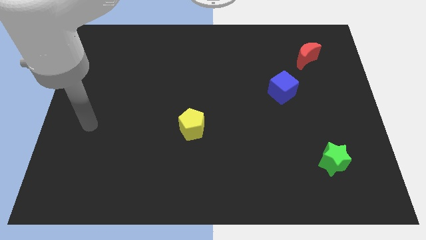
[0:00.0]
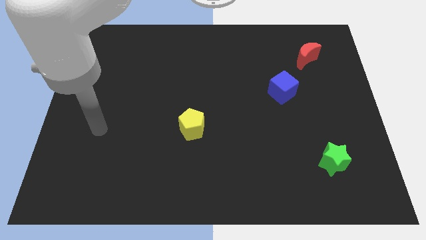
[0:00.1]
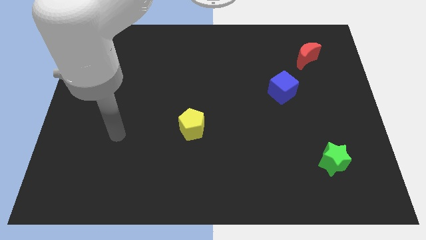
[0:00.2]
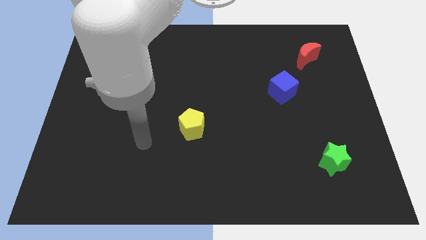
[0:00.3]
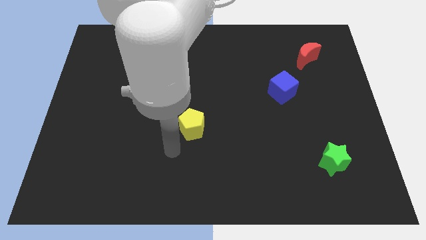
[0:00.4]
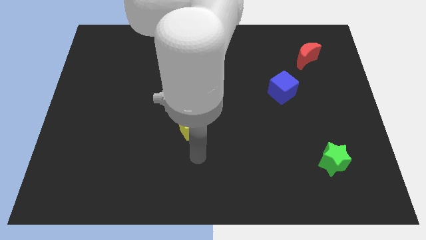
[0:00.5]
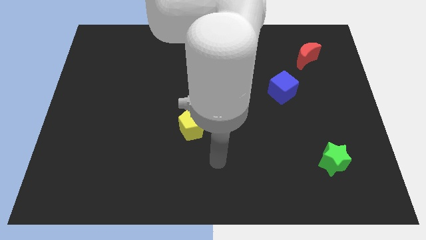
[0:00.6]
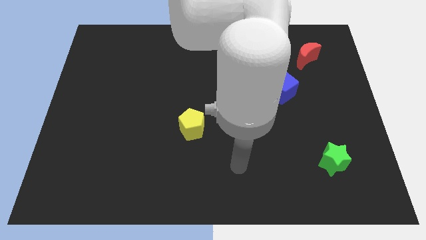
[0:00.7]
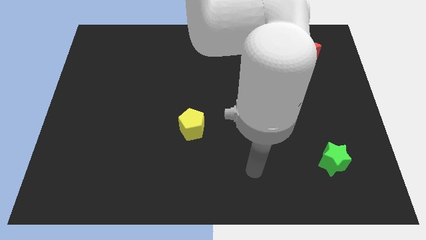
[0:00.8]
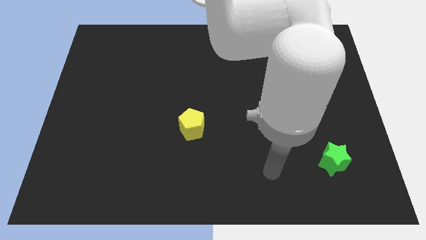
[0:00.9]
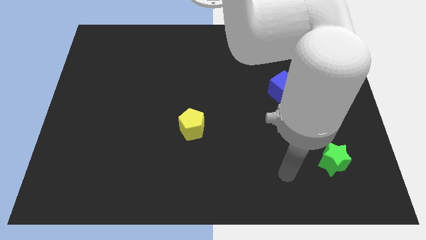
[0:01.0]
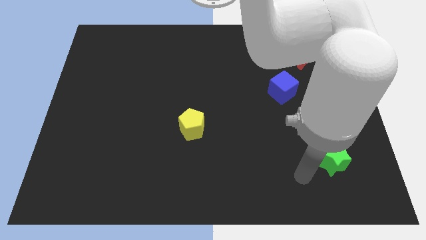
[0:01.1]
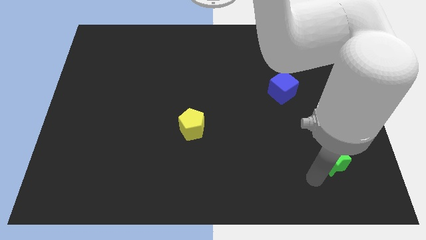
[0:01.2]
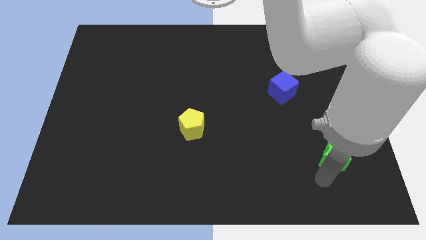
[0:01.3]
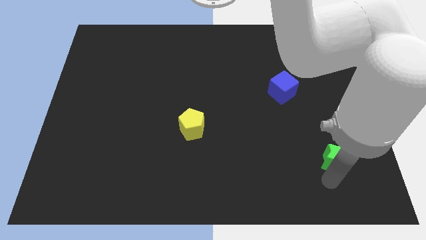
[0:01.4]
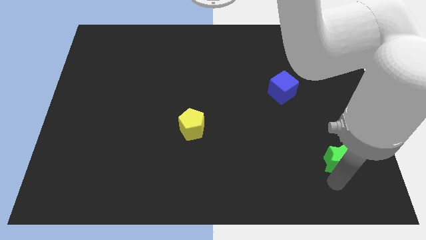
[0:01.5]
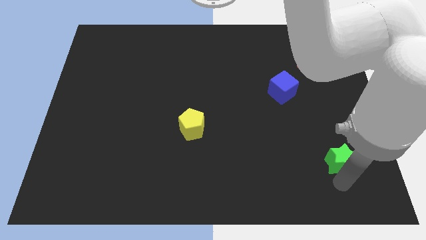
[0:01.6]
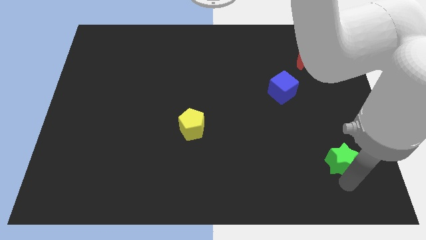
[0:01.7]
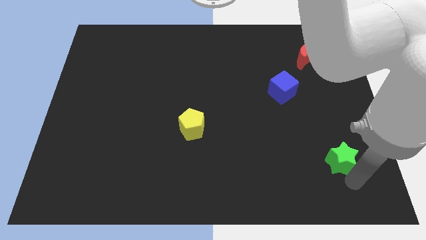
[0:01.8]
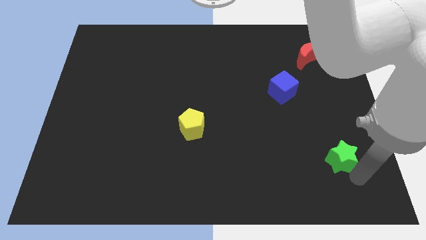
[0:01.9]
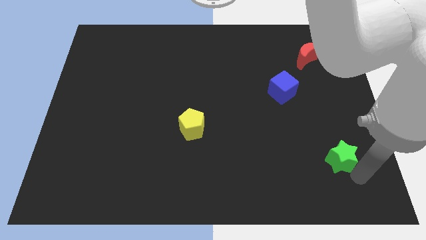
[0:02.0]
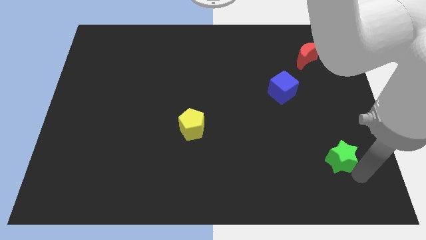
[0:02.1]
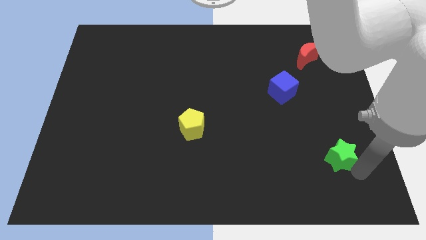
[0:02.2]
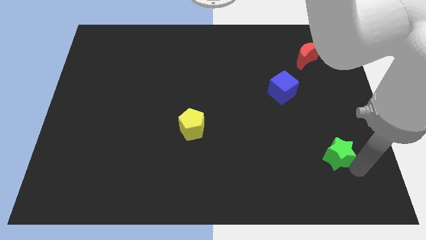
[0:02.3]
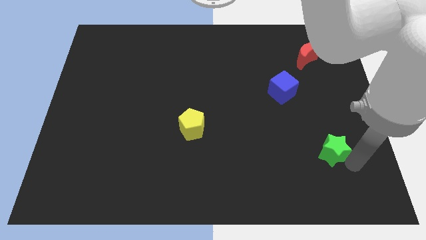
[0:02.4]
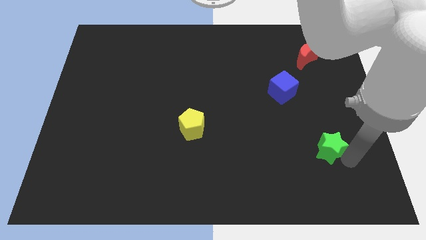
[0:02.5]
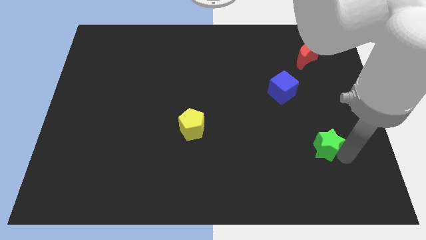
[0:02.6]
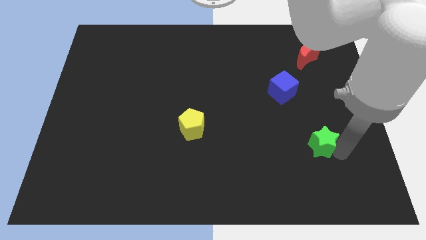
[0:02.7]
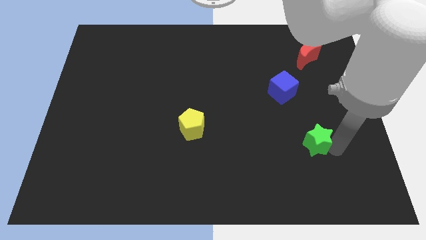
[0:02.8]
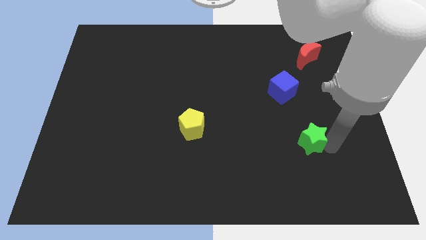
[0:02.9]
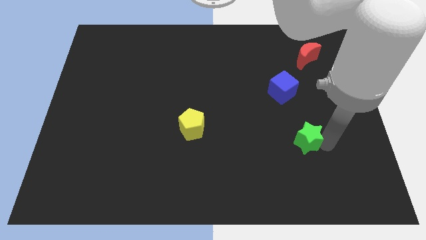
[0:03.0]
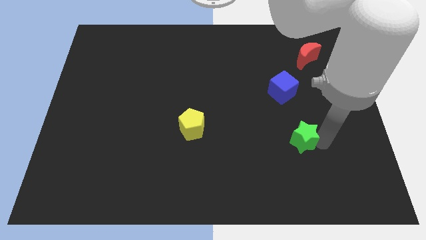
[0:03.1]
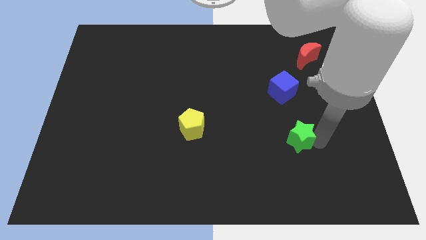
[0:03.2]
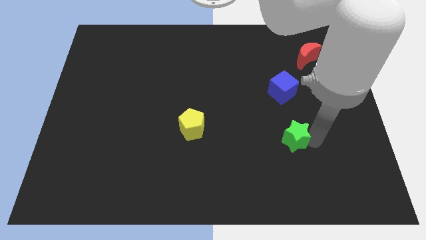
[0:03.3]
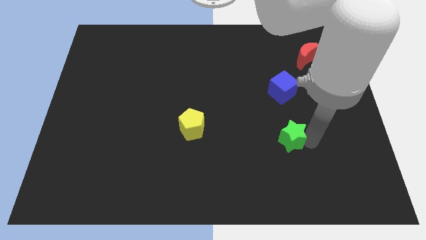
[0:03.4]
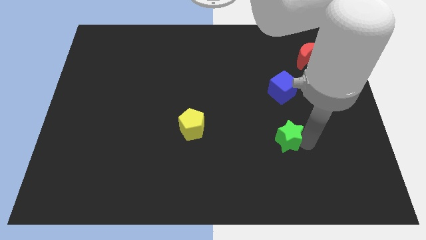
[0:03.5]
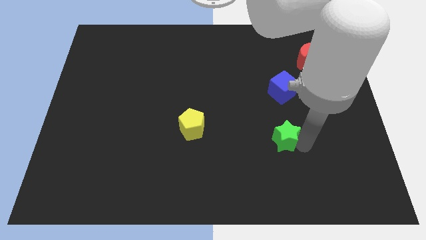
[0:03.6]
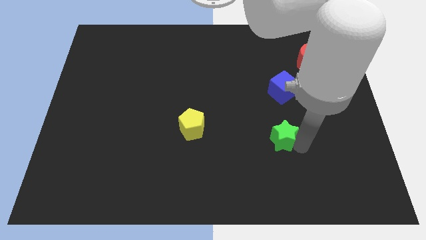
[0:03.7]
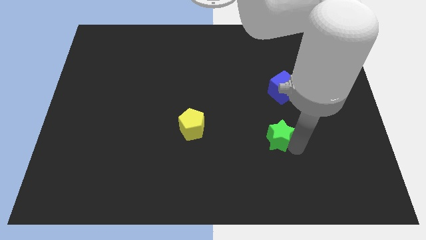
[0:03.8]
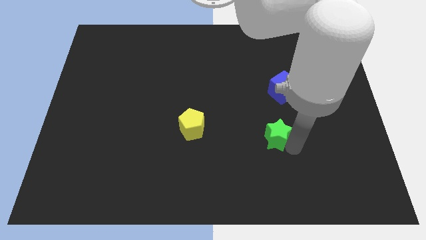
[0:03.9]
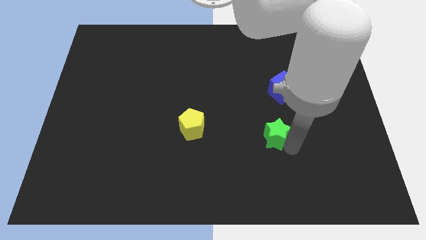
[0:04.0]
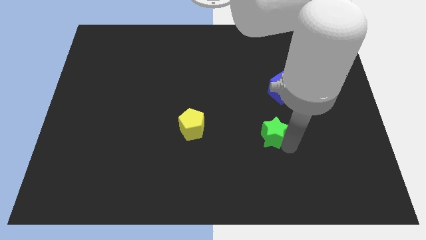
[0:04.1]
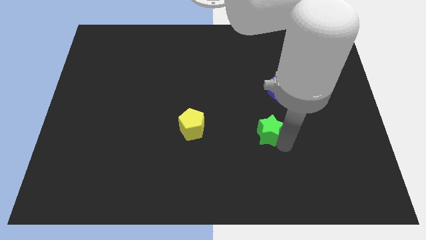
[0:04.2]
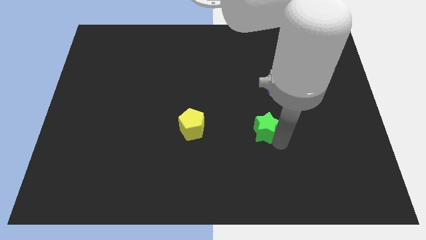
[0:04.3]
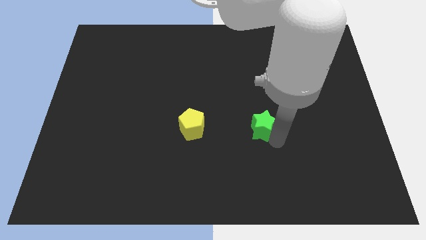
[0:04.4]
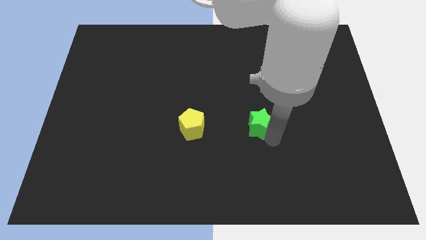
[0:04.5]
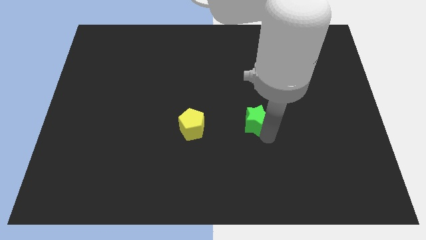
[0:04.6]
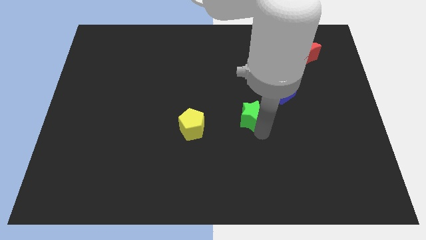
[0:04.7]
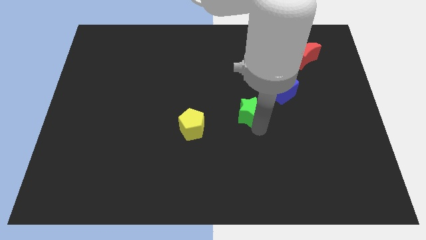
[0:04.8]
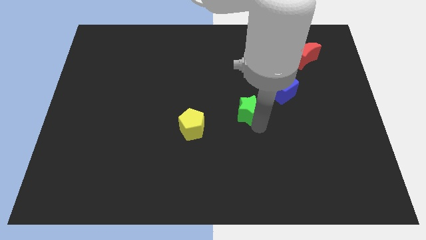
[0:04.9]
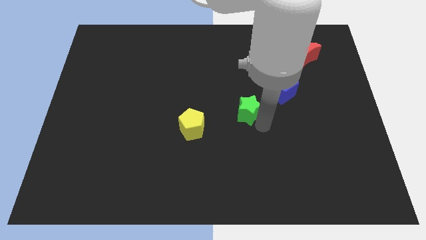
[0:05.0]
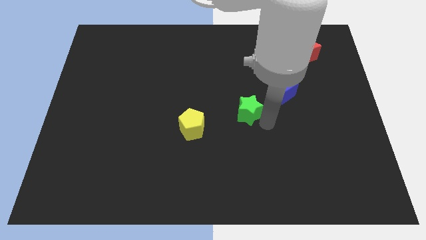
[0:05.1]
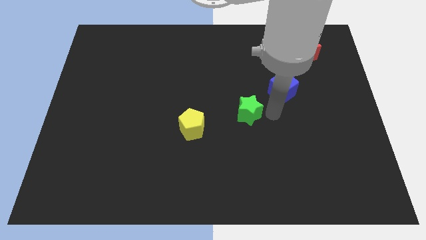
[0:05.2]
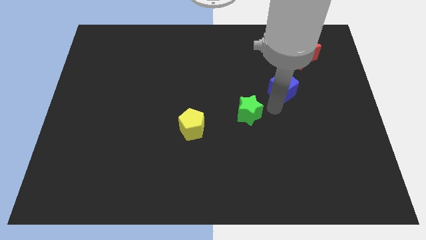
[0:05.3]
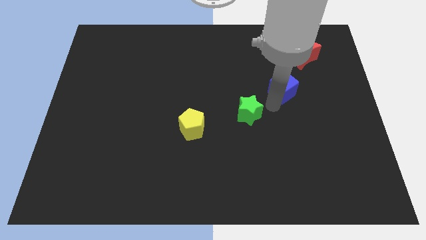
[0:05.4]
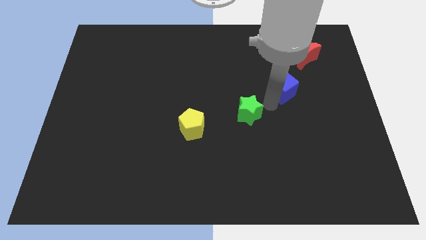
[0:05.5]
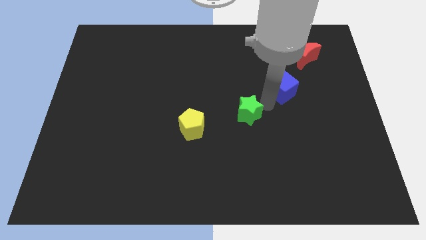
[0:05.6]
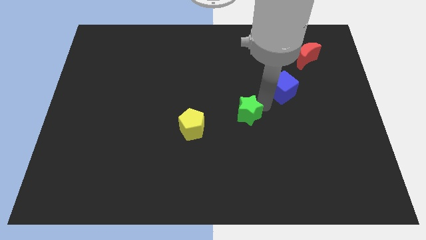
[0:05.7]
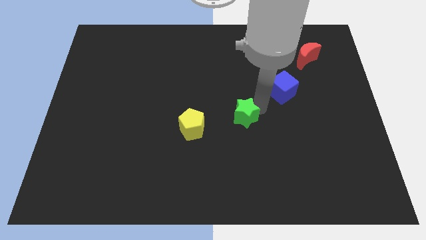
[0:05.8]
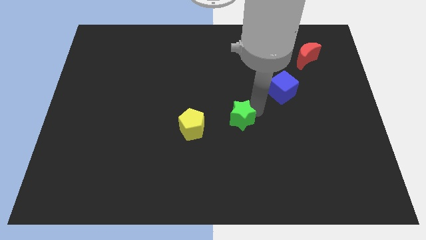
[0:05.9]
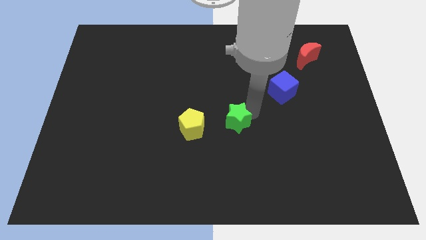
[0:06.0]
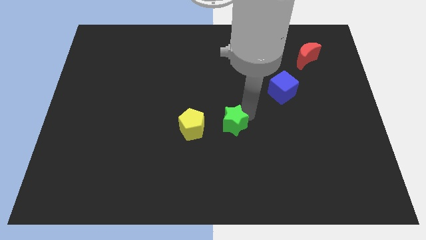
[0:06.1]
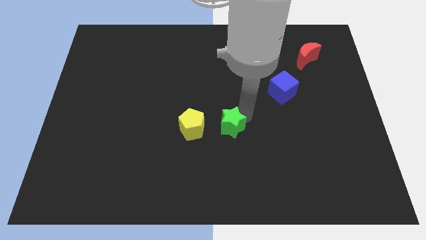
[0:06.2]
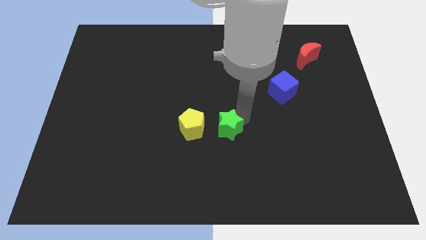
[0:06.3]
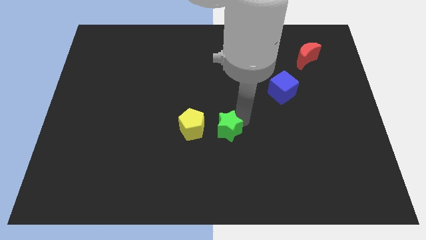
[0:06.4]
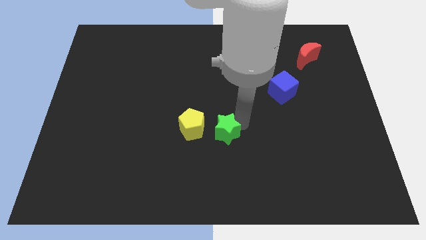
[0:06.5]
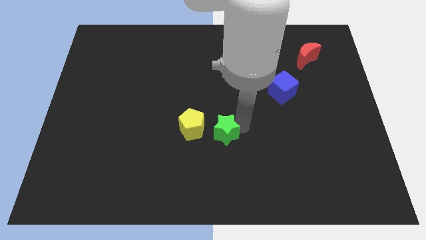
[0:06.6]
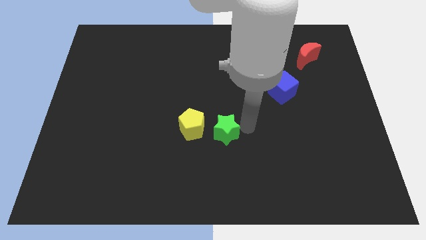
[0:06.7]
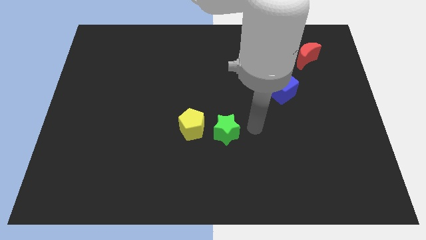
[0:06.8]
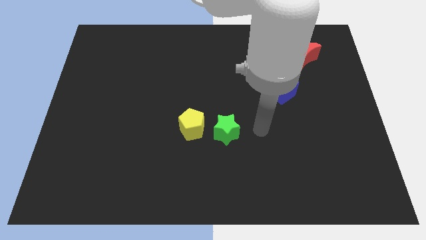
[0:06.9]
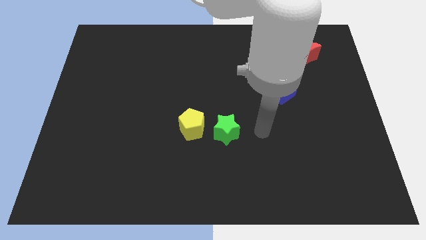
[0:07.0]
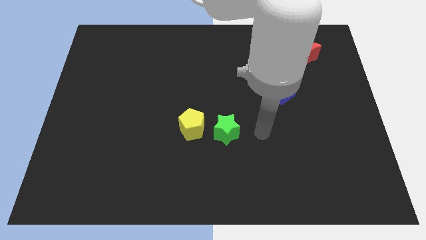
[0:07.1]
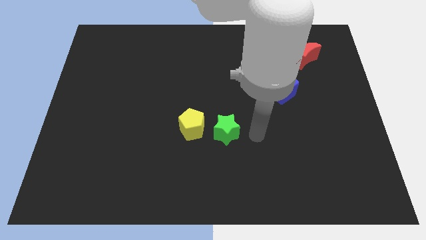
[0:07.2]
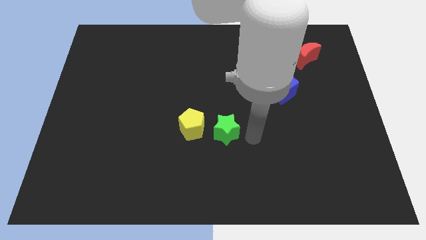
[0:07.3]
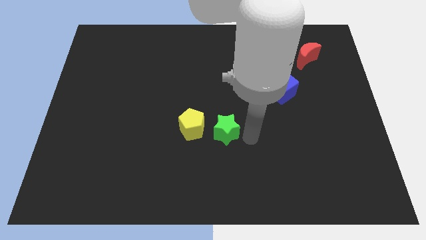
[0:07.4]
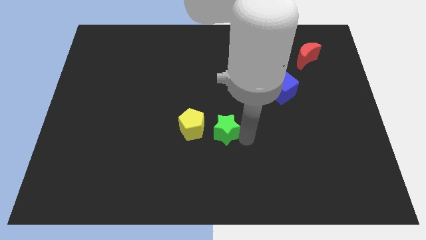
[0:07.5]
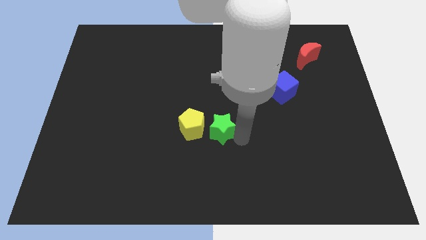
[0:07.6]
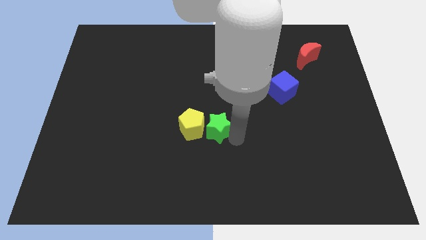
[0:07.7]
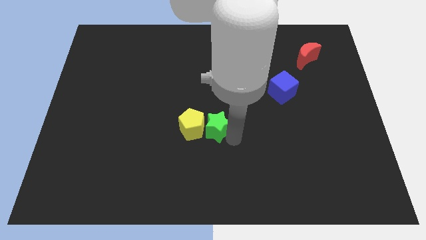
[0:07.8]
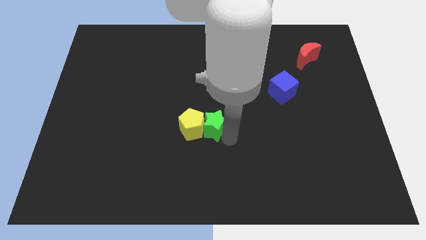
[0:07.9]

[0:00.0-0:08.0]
put the green block towards the pentagon

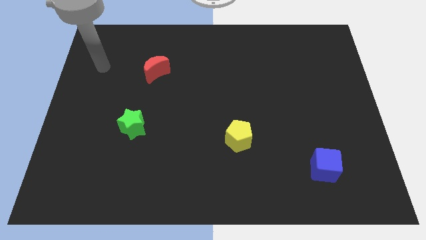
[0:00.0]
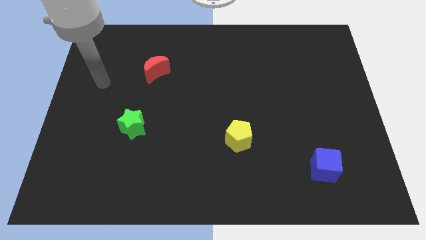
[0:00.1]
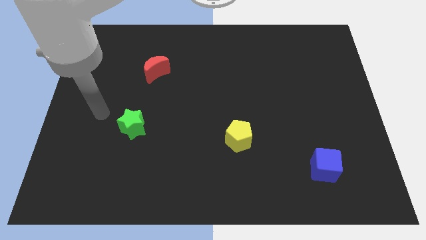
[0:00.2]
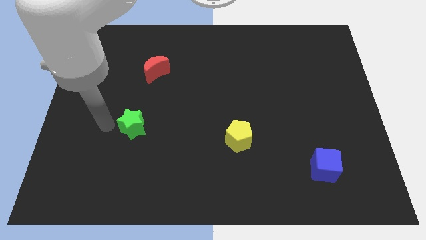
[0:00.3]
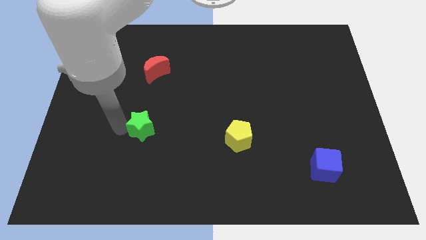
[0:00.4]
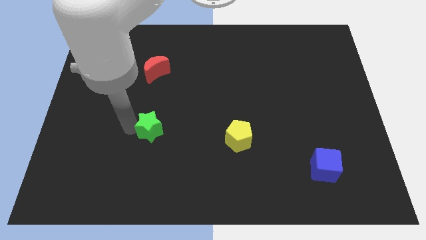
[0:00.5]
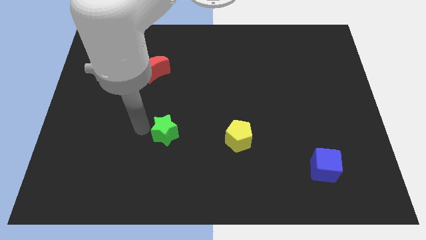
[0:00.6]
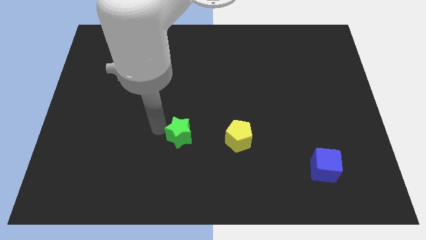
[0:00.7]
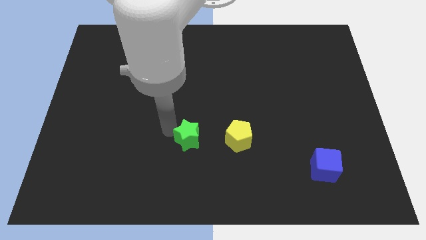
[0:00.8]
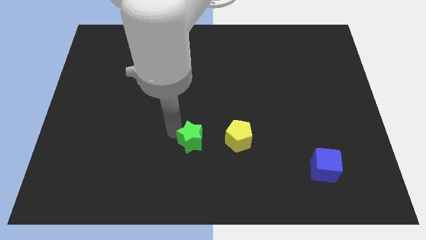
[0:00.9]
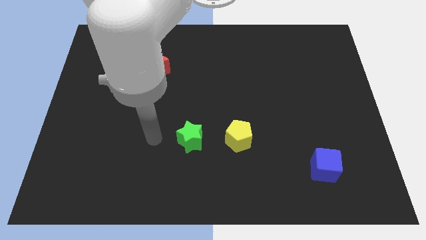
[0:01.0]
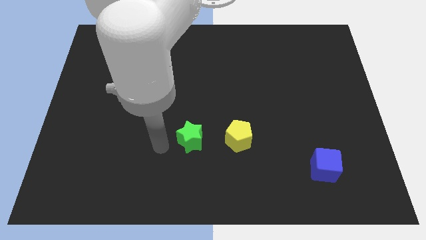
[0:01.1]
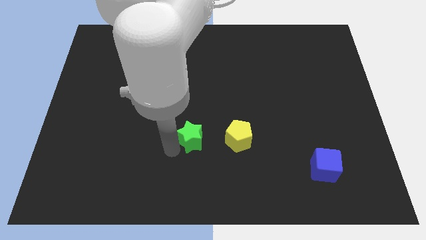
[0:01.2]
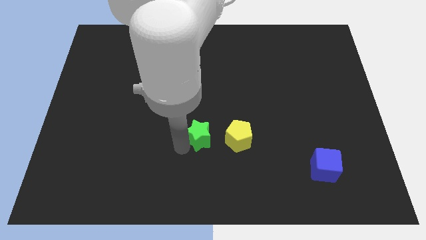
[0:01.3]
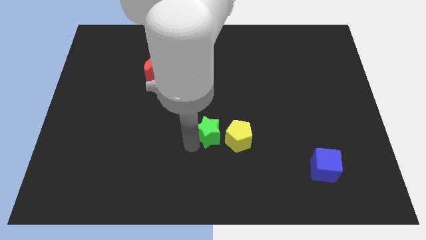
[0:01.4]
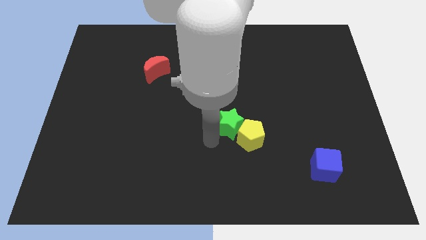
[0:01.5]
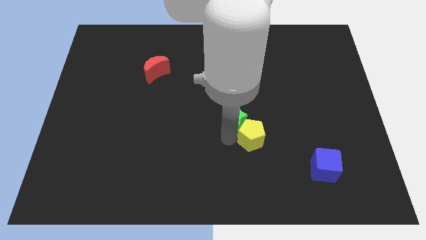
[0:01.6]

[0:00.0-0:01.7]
slide the green block close to the pentagon
